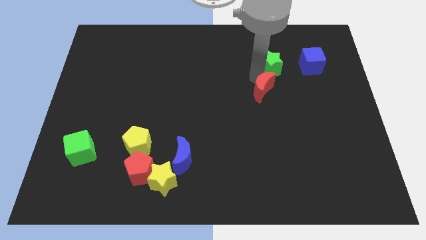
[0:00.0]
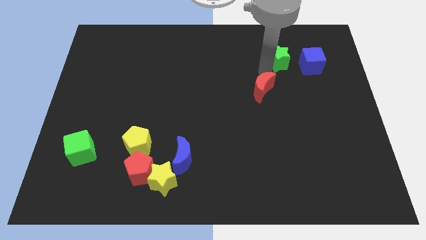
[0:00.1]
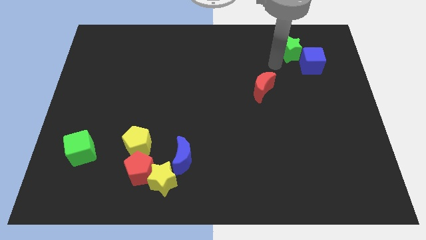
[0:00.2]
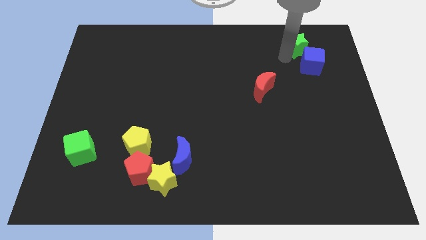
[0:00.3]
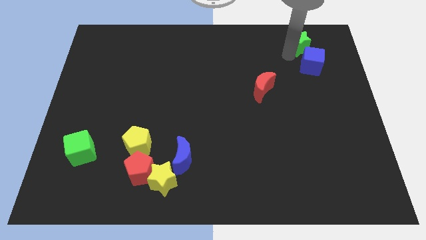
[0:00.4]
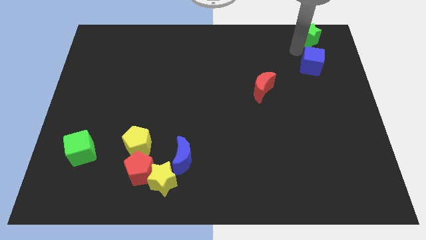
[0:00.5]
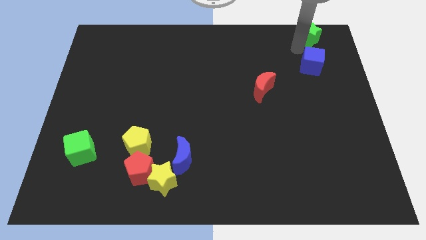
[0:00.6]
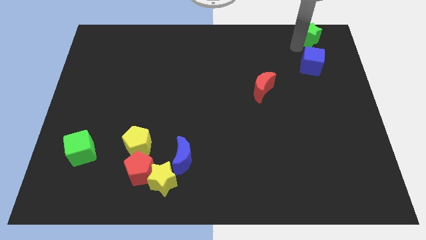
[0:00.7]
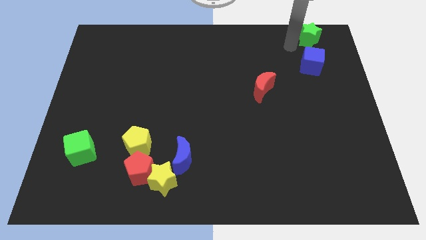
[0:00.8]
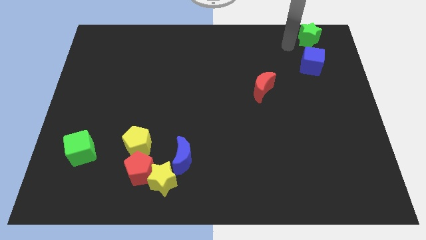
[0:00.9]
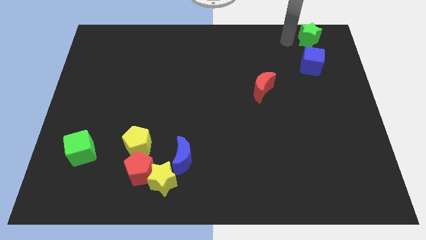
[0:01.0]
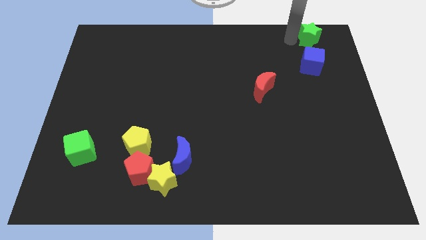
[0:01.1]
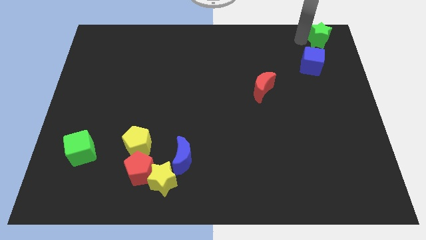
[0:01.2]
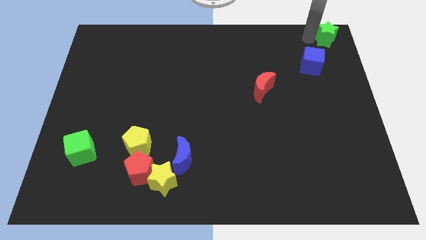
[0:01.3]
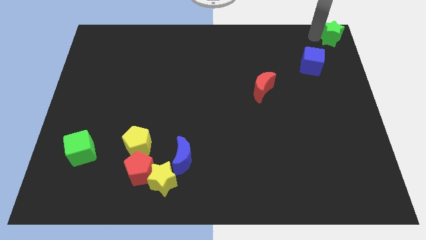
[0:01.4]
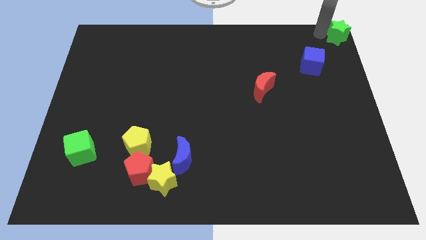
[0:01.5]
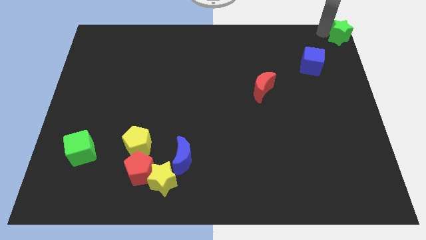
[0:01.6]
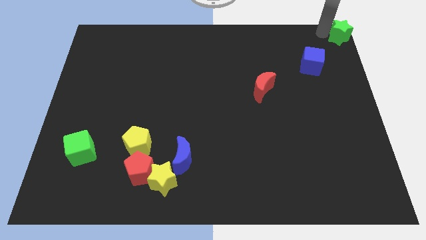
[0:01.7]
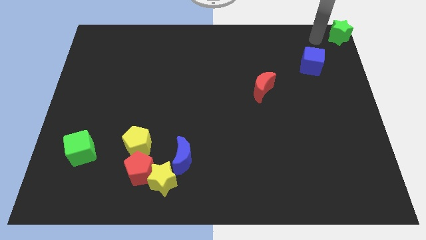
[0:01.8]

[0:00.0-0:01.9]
move the green star to the top left

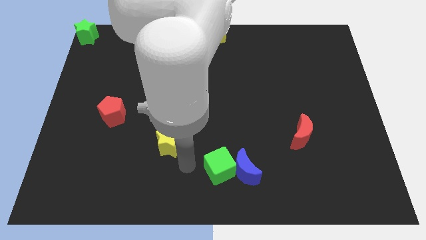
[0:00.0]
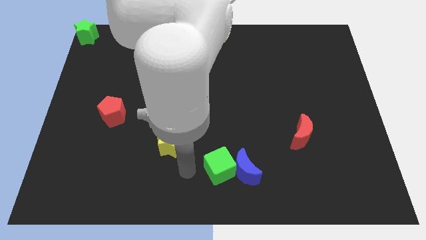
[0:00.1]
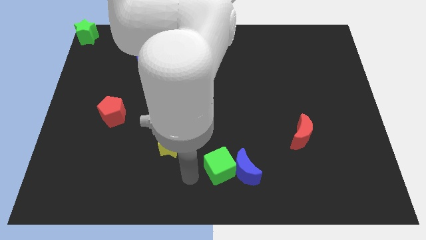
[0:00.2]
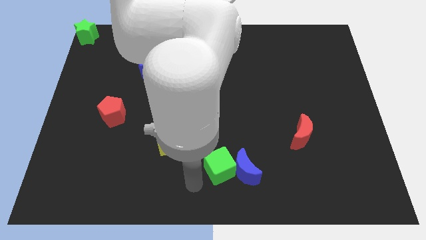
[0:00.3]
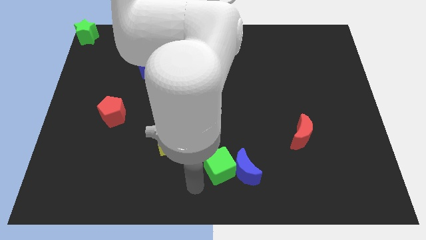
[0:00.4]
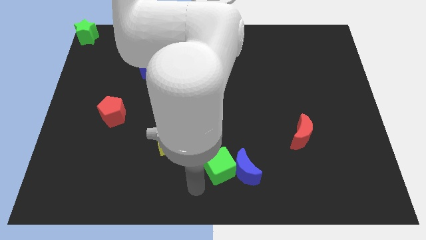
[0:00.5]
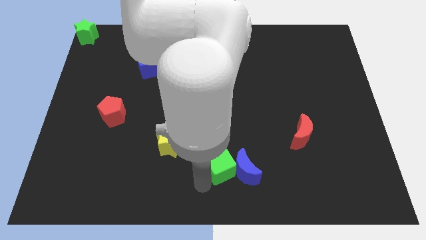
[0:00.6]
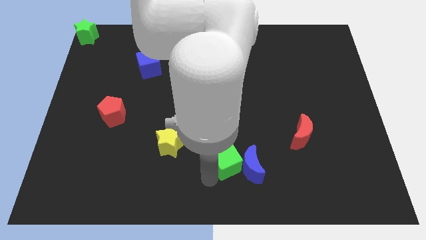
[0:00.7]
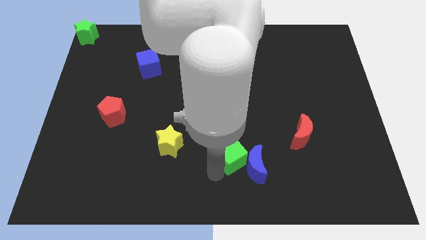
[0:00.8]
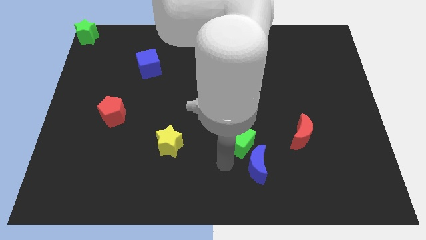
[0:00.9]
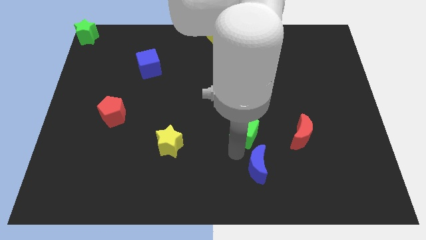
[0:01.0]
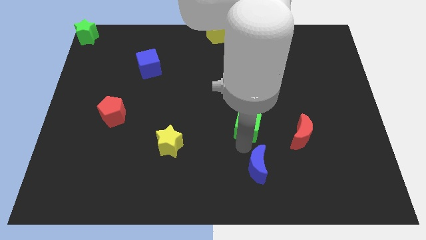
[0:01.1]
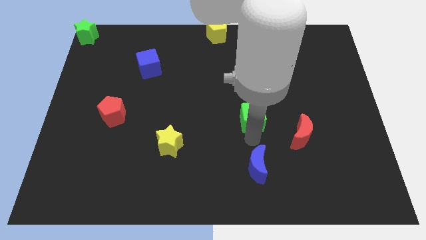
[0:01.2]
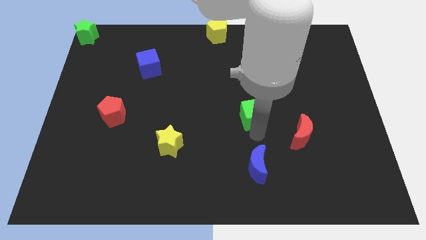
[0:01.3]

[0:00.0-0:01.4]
place the green cube above the blue crescent

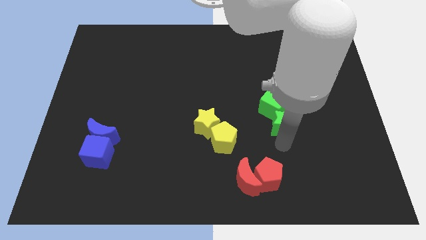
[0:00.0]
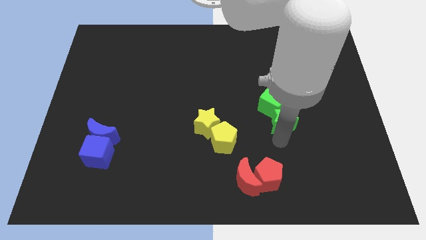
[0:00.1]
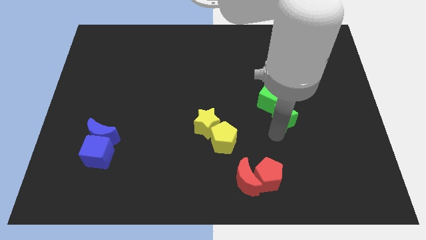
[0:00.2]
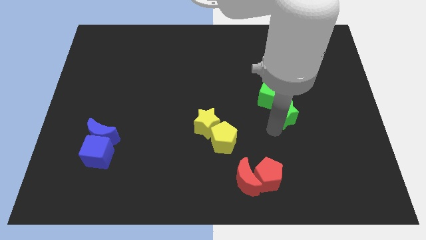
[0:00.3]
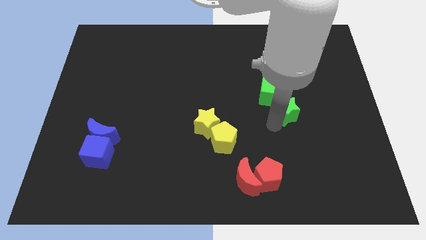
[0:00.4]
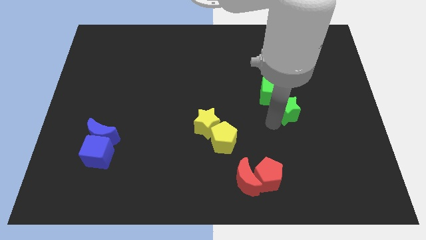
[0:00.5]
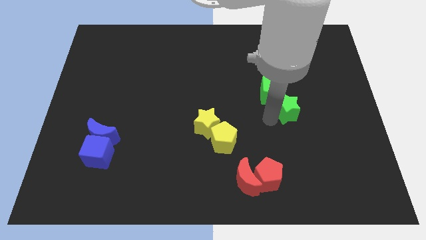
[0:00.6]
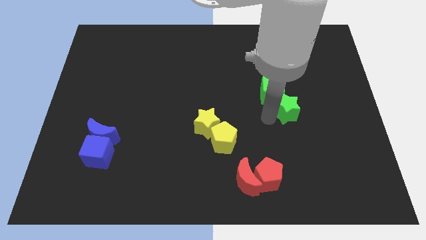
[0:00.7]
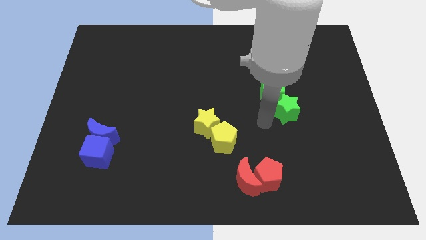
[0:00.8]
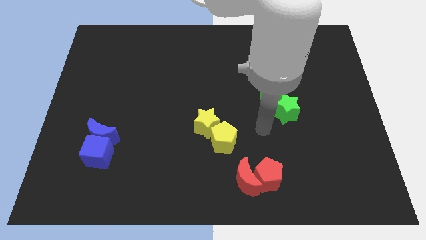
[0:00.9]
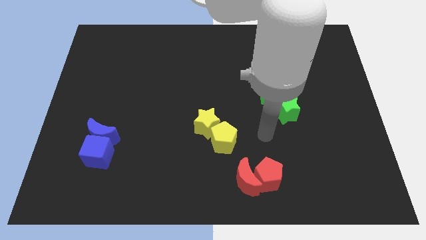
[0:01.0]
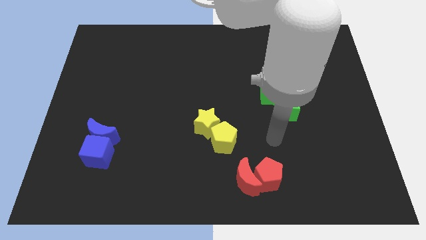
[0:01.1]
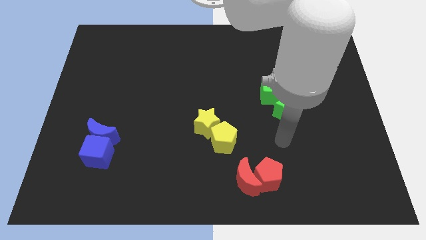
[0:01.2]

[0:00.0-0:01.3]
push the green star into the green cube slightly towards the top

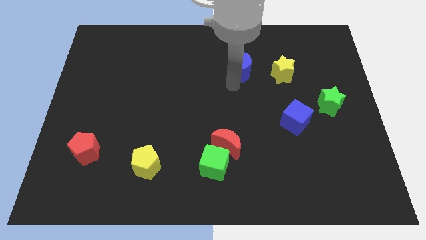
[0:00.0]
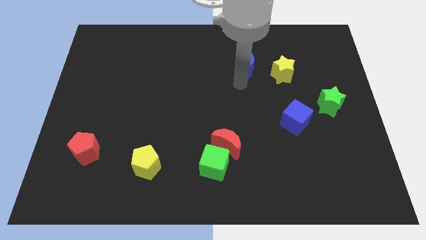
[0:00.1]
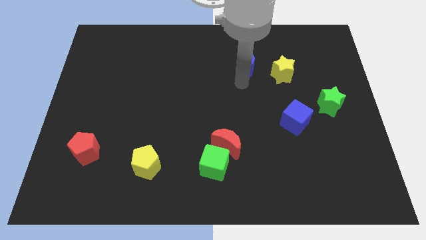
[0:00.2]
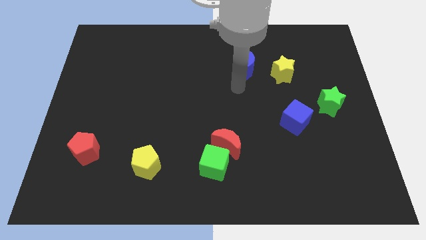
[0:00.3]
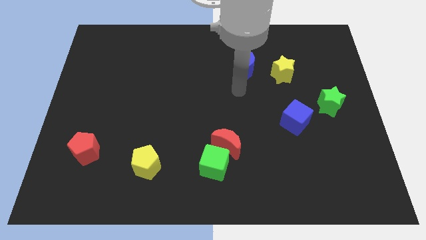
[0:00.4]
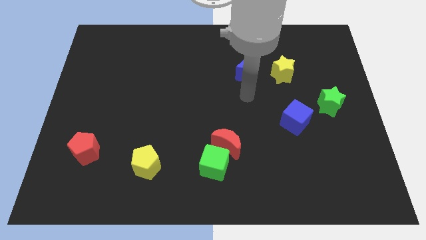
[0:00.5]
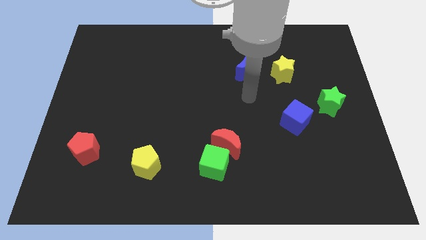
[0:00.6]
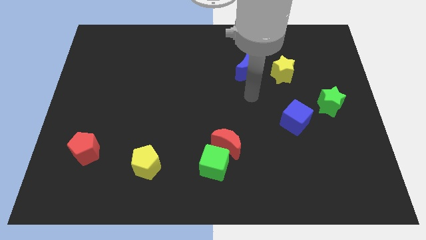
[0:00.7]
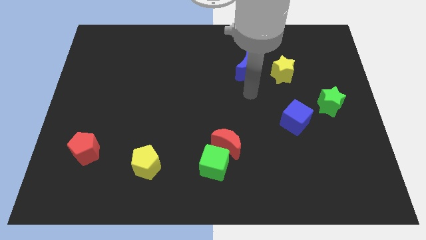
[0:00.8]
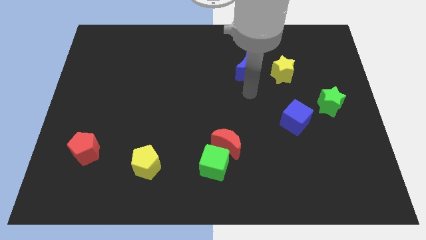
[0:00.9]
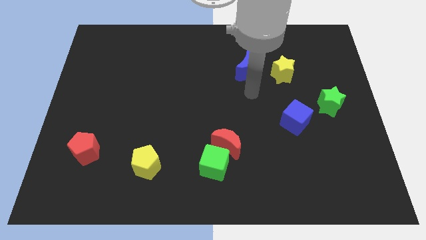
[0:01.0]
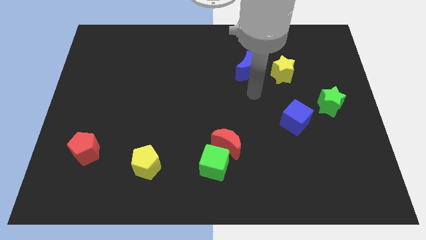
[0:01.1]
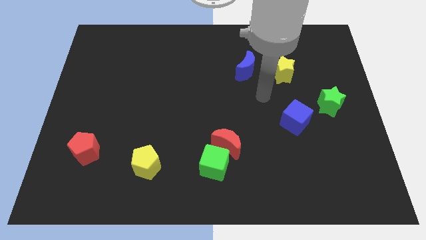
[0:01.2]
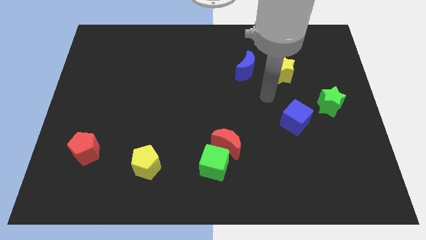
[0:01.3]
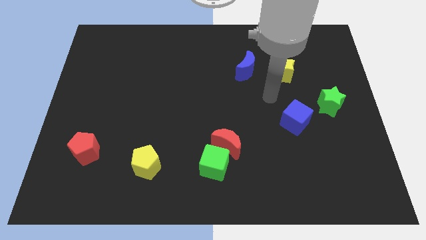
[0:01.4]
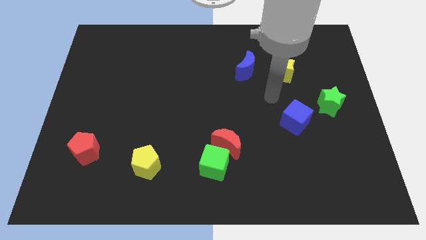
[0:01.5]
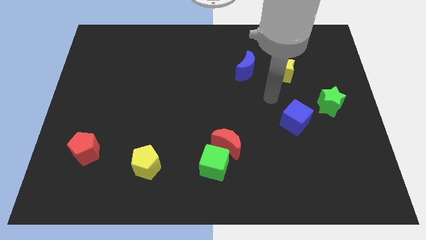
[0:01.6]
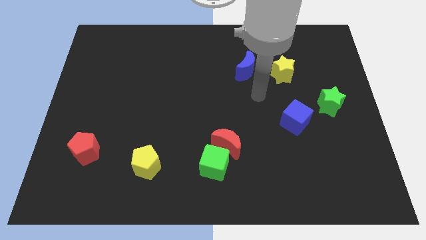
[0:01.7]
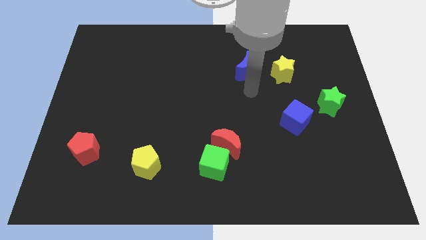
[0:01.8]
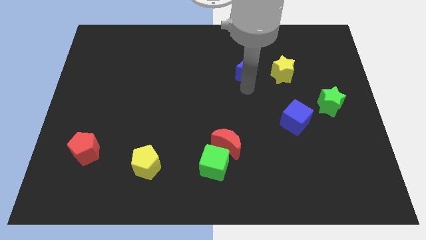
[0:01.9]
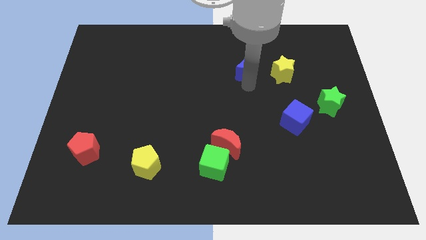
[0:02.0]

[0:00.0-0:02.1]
slightly move the blue moon towards the top right

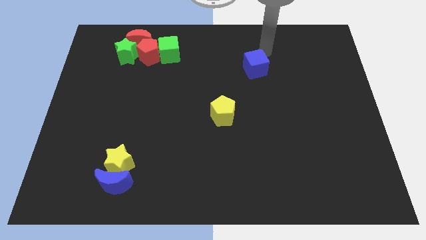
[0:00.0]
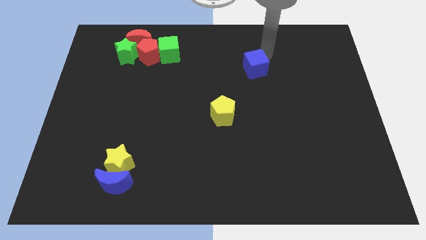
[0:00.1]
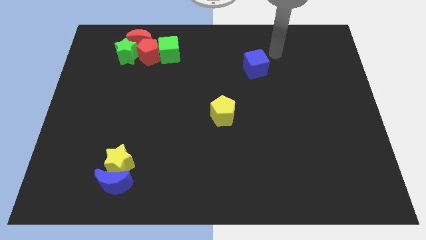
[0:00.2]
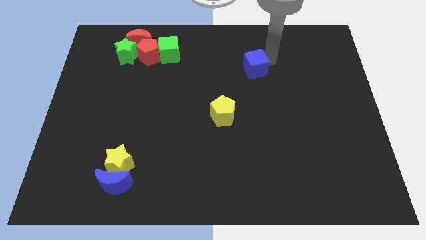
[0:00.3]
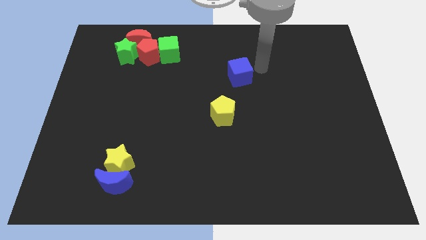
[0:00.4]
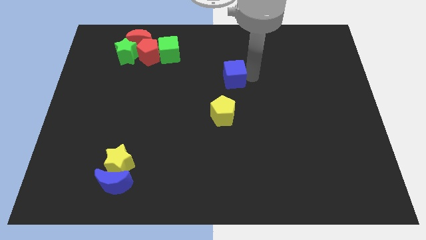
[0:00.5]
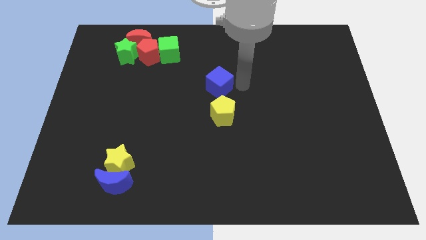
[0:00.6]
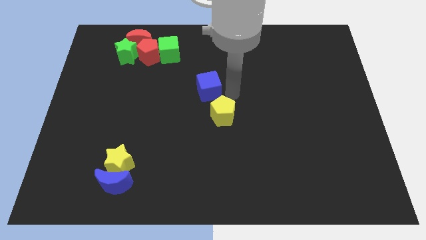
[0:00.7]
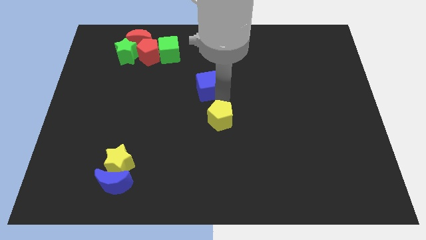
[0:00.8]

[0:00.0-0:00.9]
place the blue cube down to the yellow pentagon

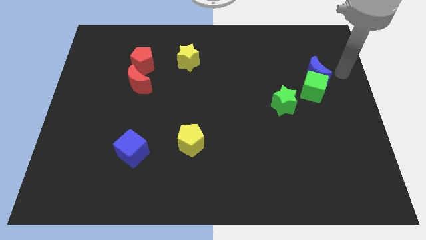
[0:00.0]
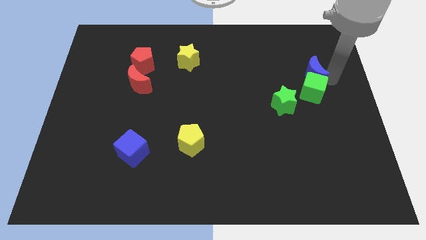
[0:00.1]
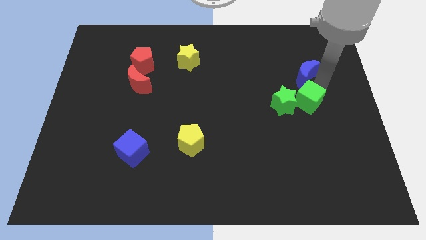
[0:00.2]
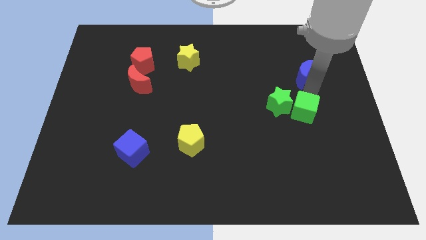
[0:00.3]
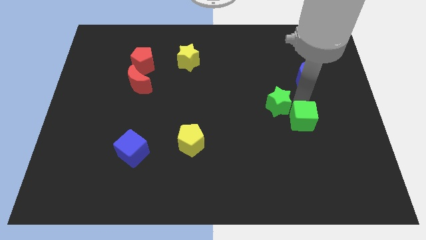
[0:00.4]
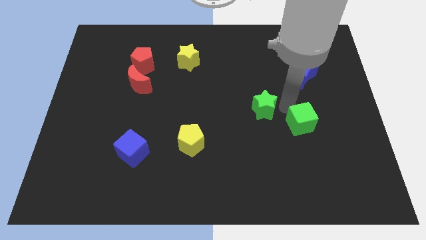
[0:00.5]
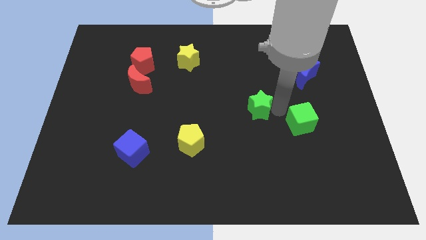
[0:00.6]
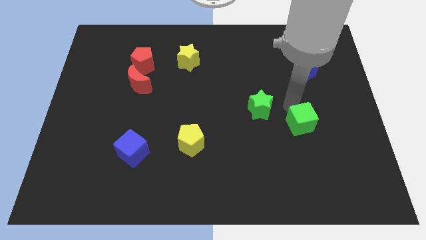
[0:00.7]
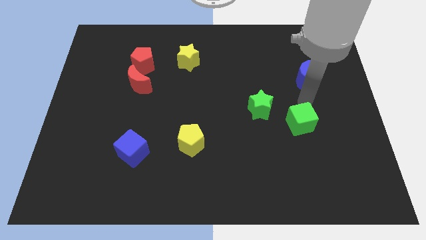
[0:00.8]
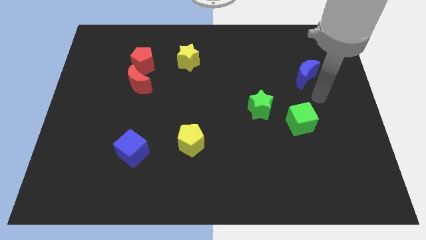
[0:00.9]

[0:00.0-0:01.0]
separate green cube and blue moon

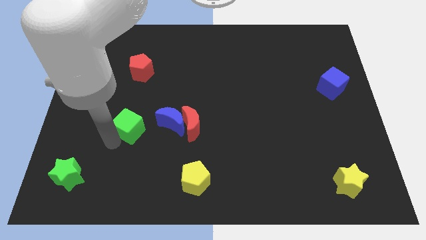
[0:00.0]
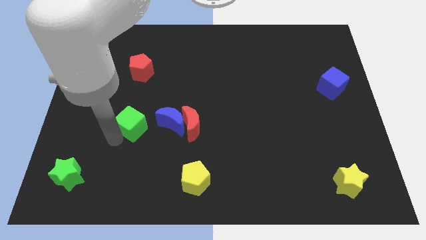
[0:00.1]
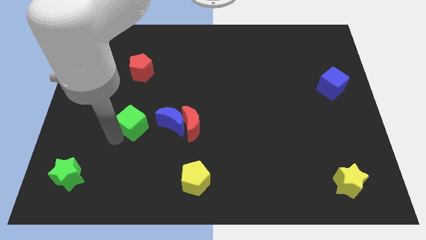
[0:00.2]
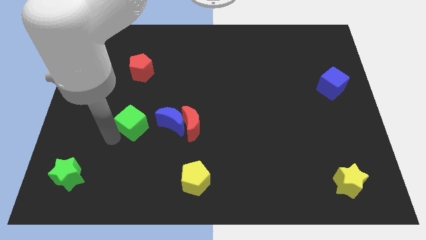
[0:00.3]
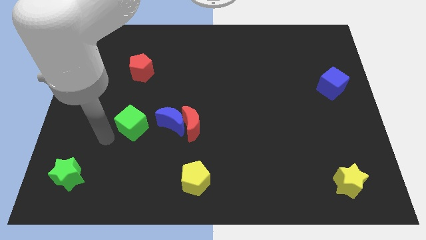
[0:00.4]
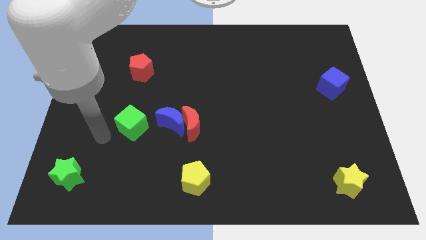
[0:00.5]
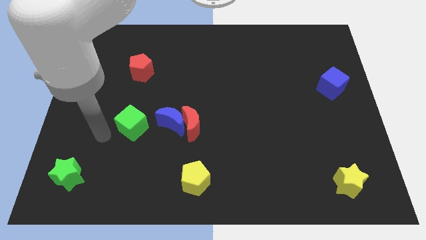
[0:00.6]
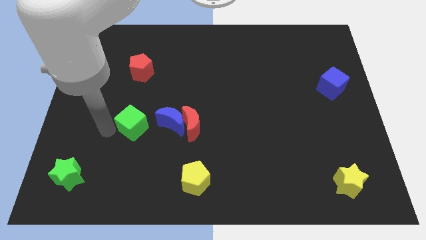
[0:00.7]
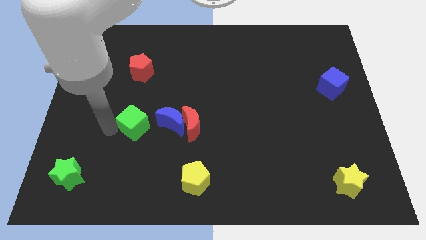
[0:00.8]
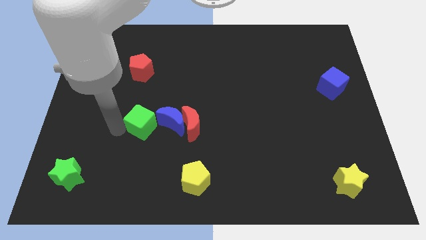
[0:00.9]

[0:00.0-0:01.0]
push the green cube into blue crescent
